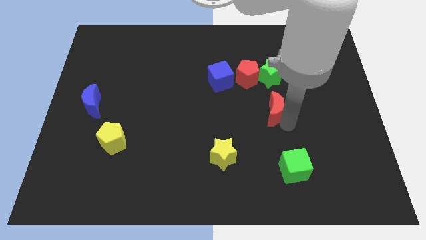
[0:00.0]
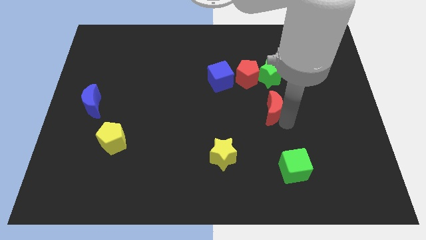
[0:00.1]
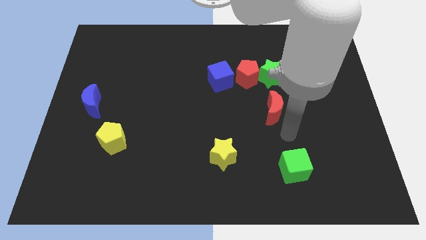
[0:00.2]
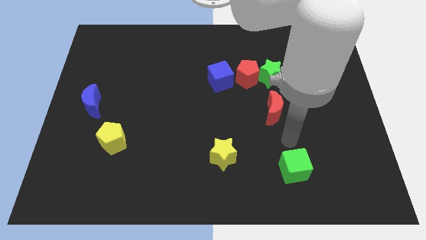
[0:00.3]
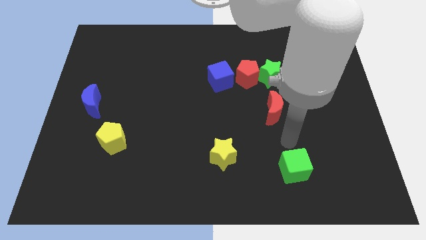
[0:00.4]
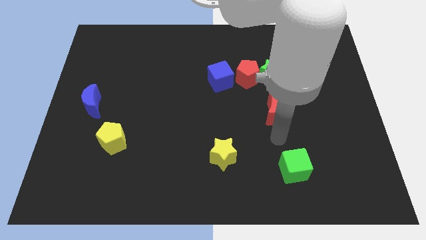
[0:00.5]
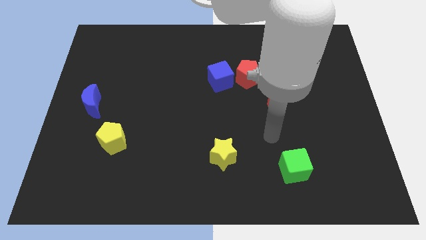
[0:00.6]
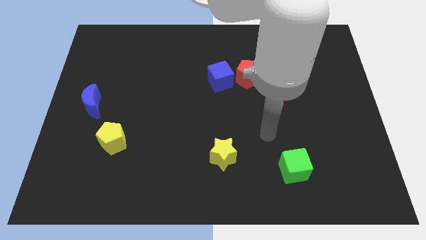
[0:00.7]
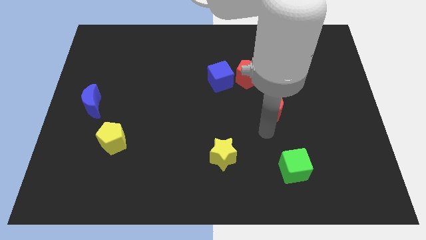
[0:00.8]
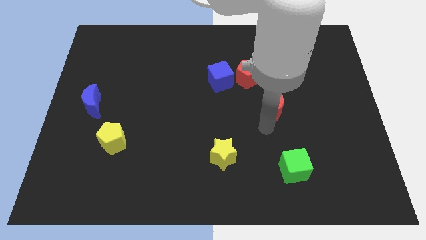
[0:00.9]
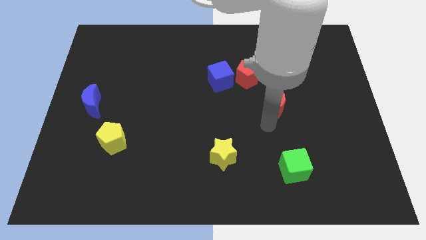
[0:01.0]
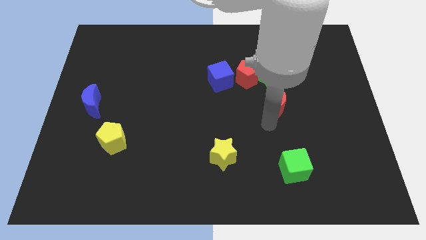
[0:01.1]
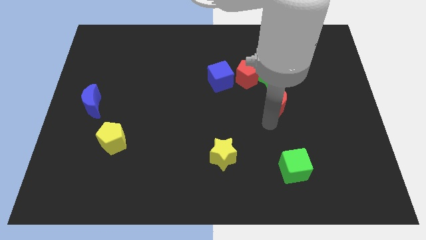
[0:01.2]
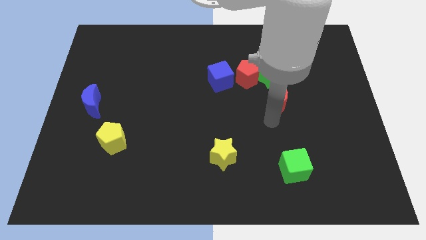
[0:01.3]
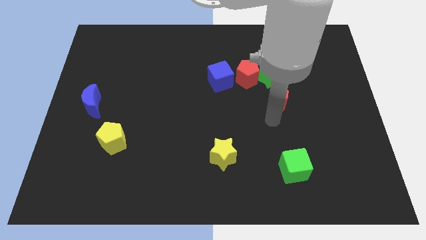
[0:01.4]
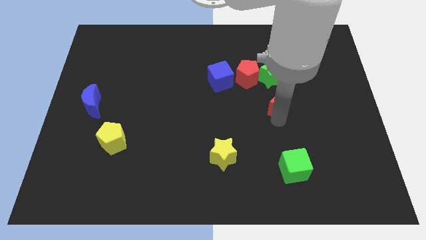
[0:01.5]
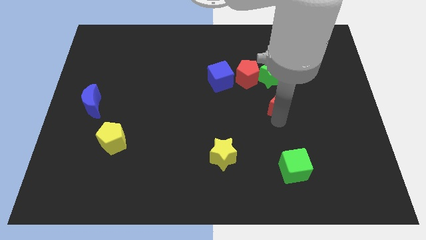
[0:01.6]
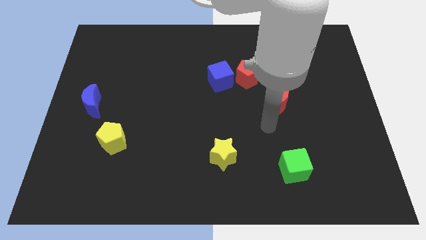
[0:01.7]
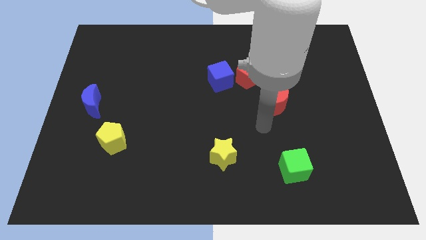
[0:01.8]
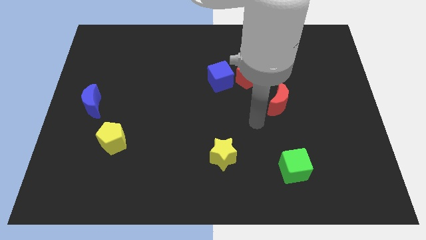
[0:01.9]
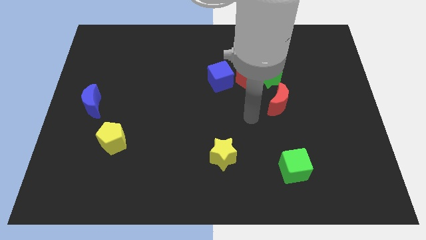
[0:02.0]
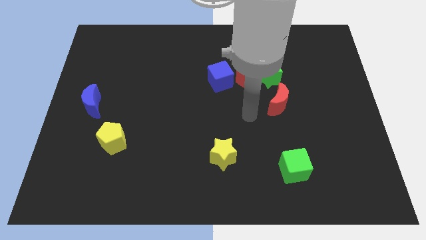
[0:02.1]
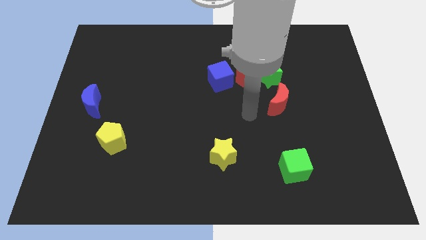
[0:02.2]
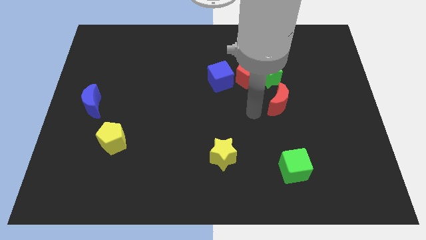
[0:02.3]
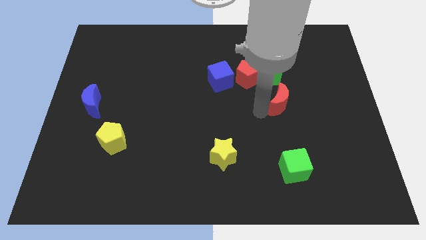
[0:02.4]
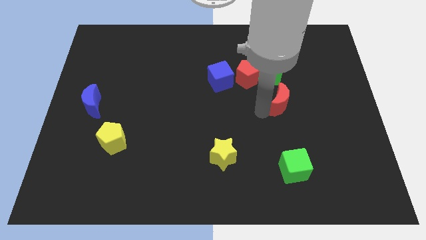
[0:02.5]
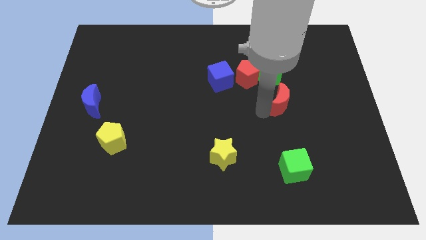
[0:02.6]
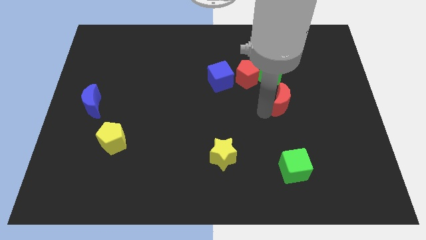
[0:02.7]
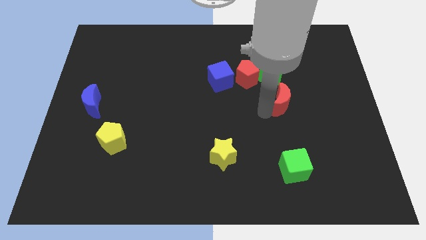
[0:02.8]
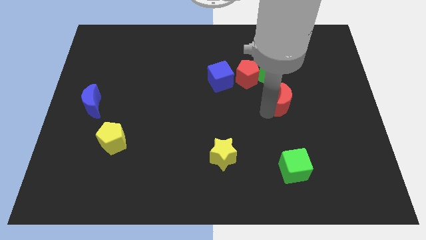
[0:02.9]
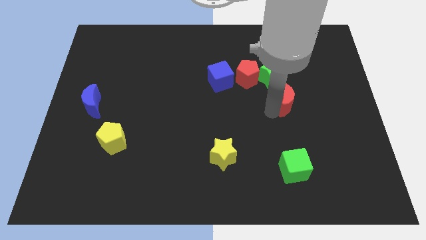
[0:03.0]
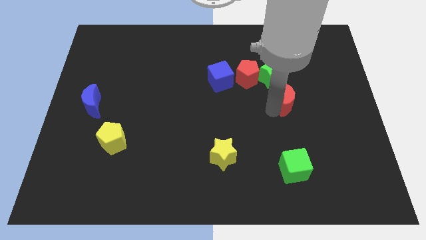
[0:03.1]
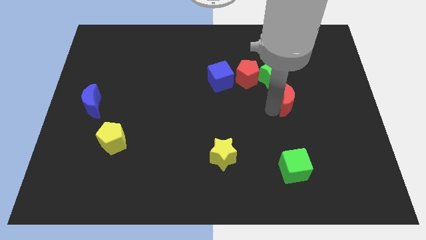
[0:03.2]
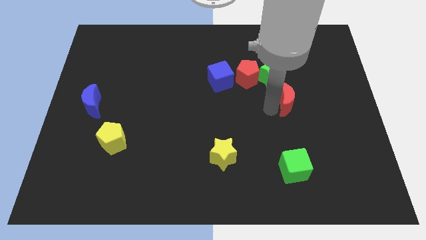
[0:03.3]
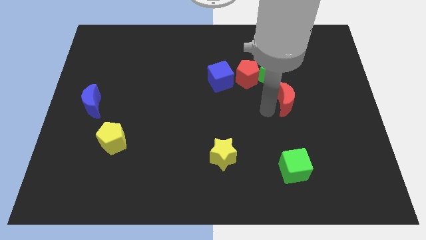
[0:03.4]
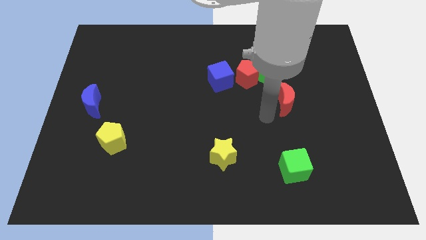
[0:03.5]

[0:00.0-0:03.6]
slide the red moon to the bottom right side of the green star

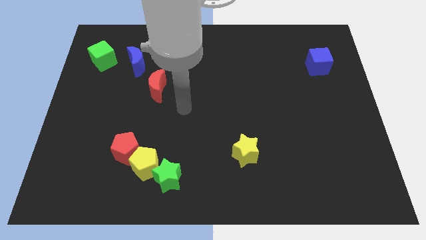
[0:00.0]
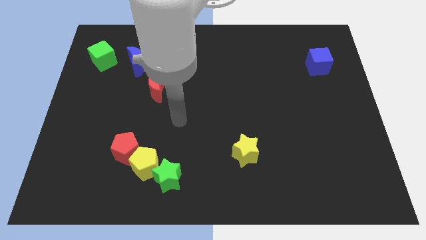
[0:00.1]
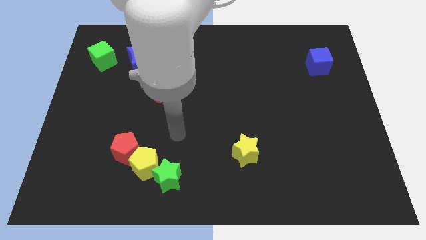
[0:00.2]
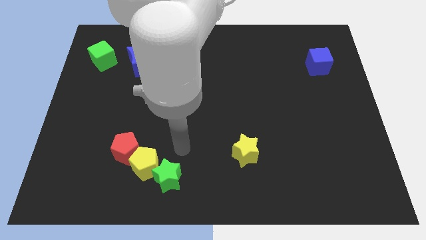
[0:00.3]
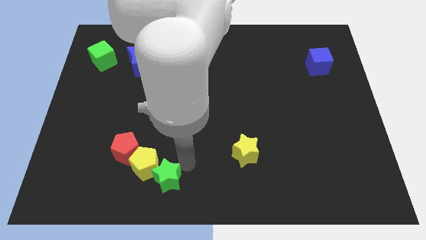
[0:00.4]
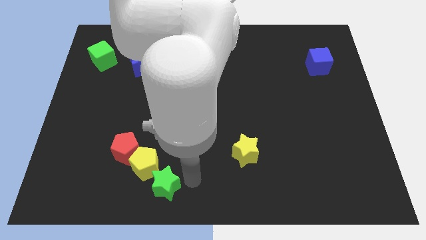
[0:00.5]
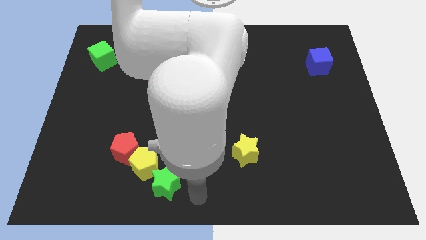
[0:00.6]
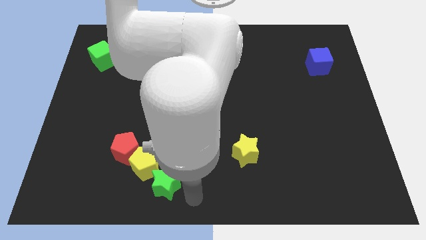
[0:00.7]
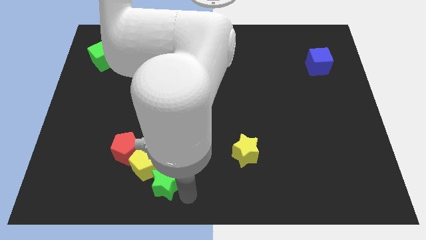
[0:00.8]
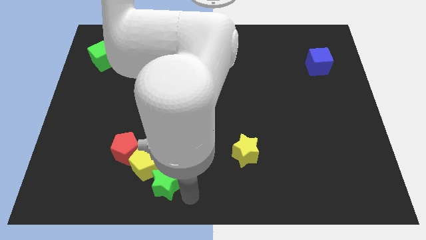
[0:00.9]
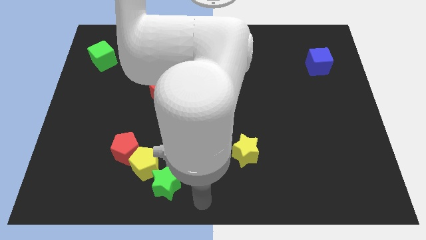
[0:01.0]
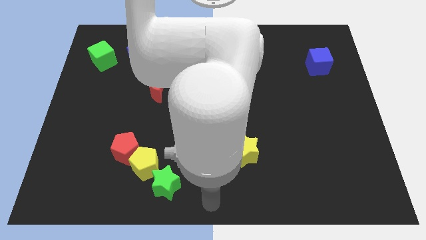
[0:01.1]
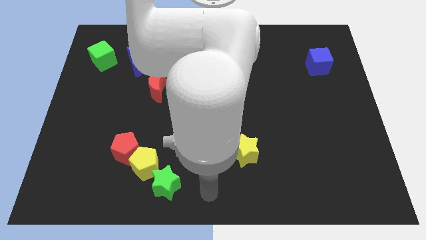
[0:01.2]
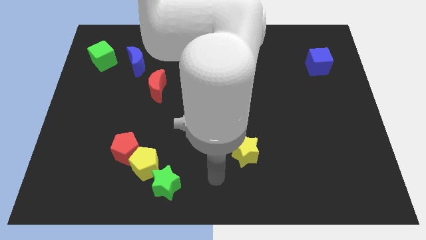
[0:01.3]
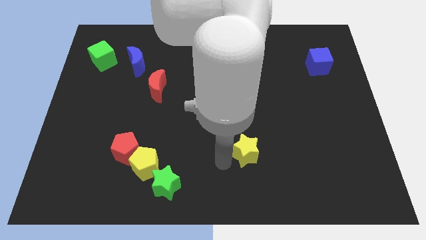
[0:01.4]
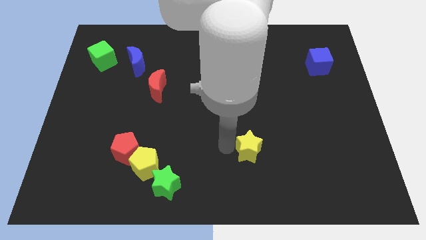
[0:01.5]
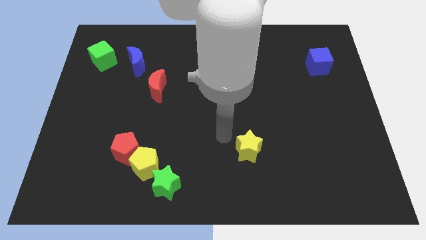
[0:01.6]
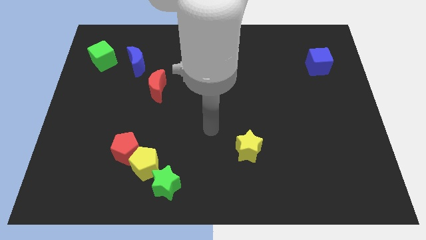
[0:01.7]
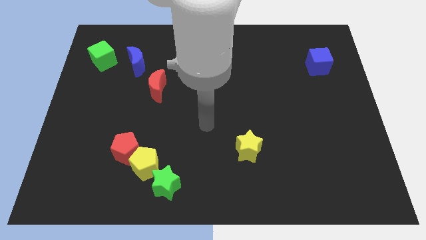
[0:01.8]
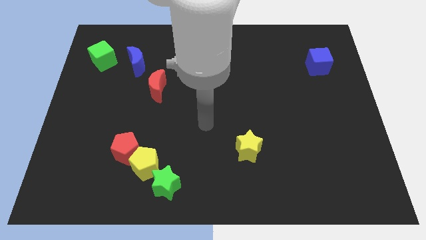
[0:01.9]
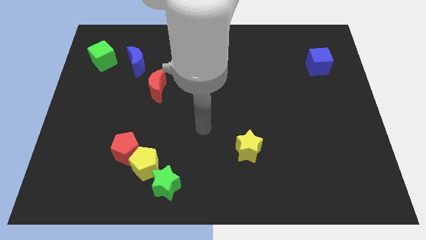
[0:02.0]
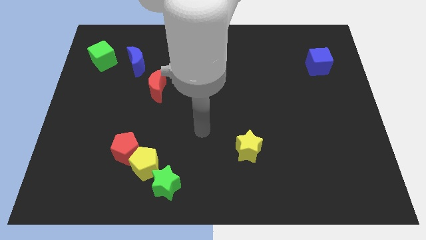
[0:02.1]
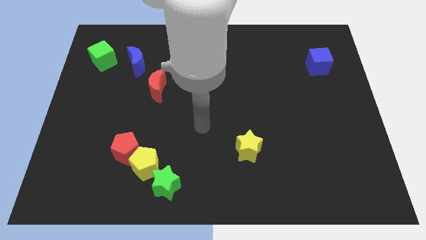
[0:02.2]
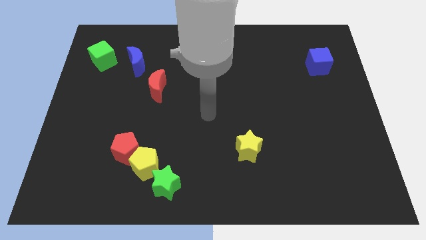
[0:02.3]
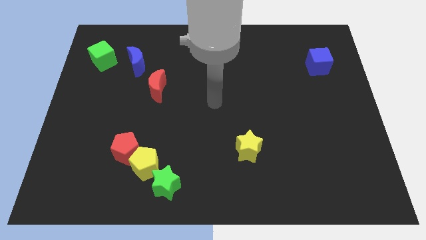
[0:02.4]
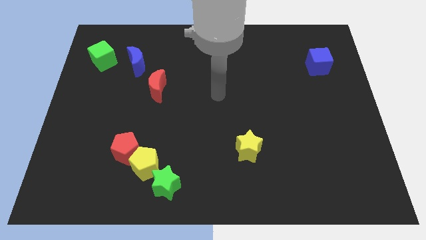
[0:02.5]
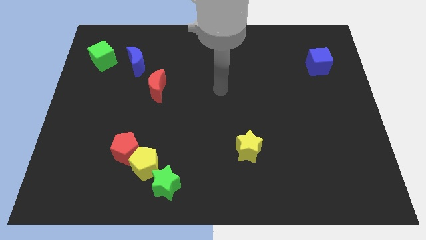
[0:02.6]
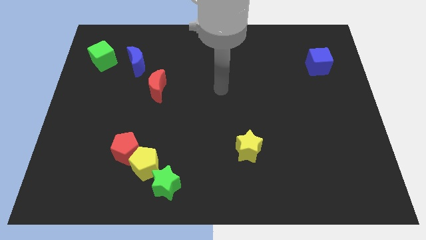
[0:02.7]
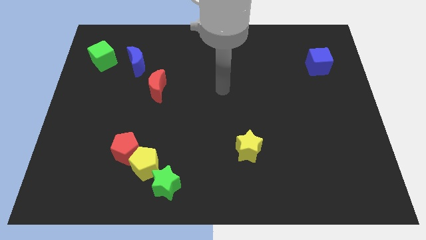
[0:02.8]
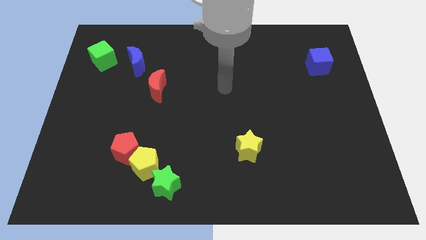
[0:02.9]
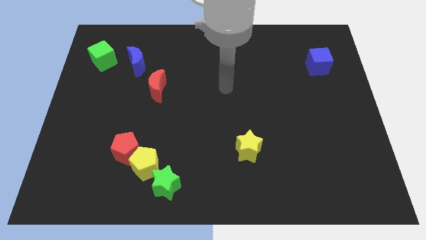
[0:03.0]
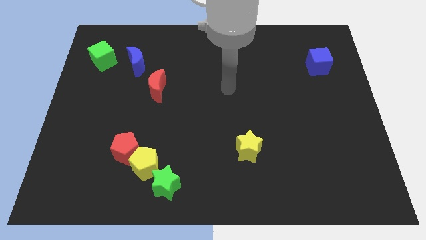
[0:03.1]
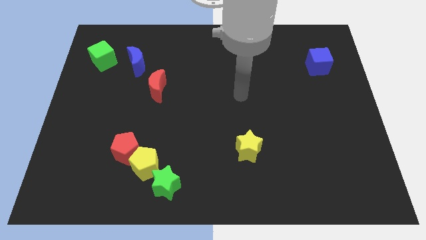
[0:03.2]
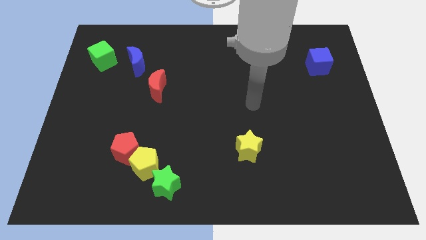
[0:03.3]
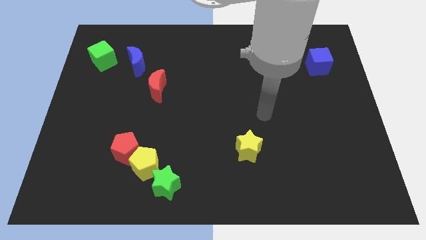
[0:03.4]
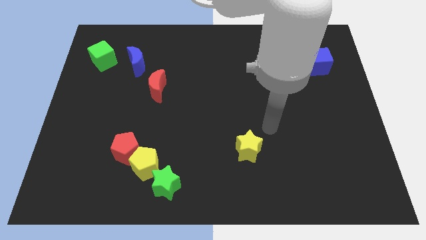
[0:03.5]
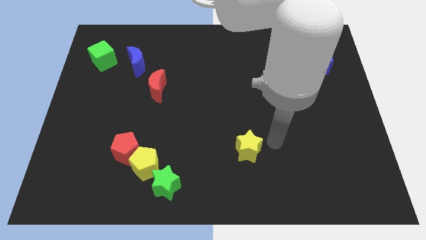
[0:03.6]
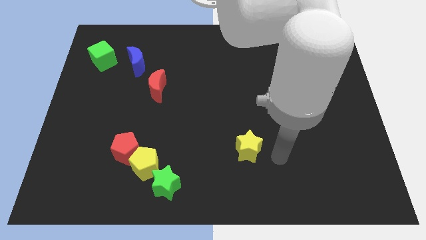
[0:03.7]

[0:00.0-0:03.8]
point your arm at the right side of the yellow star

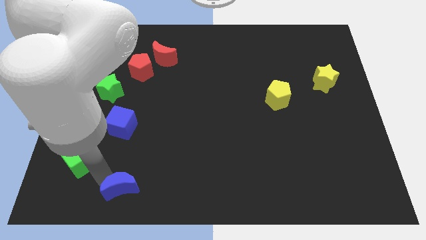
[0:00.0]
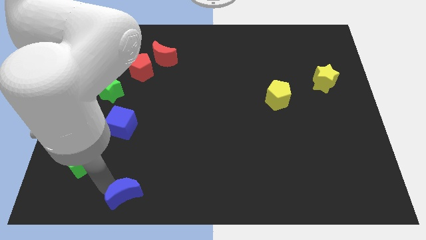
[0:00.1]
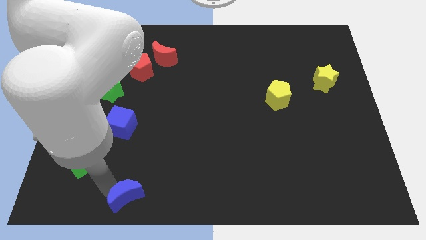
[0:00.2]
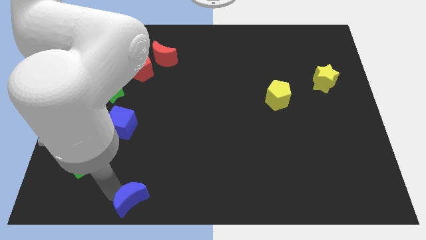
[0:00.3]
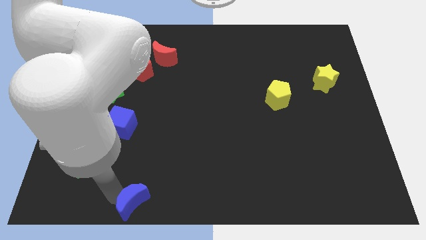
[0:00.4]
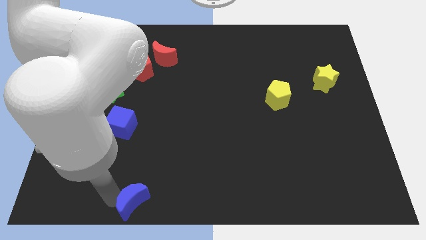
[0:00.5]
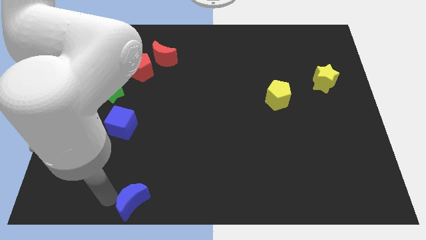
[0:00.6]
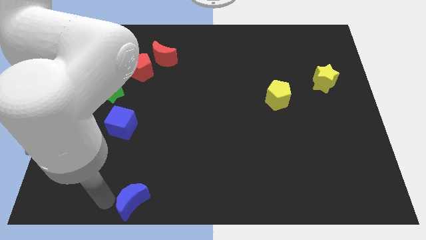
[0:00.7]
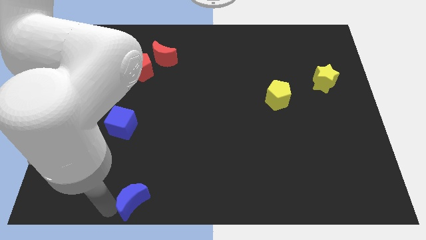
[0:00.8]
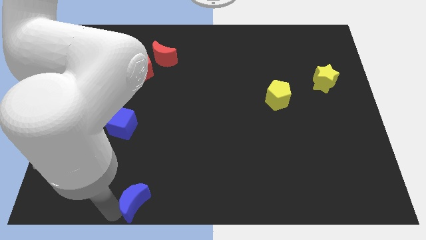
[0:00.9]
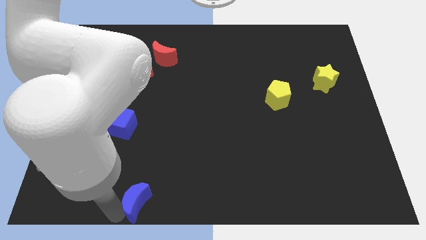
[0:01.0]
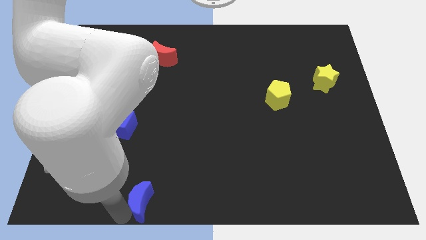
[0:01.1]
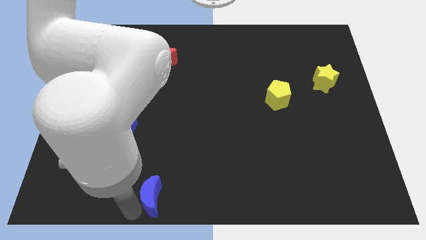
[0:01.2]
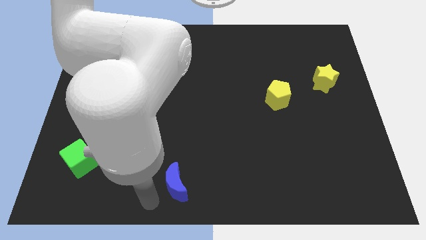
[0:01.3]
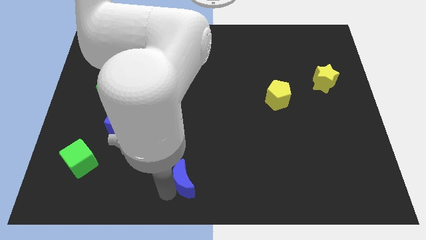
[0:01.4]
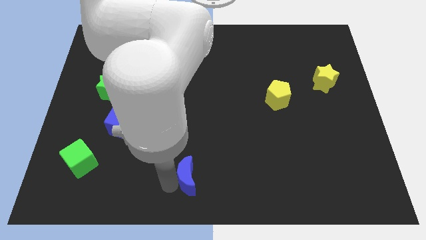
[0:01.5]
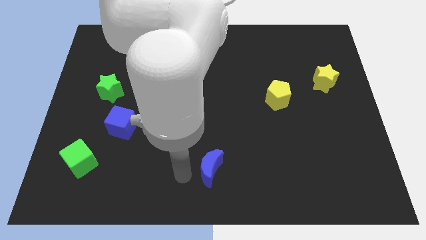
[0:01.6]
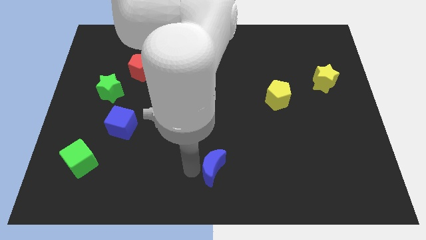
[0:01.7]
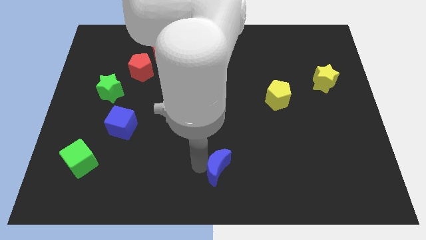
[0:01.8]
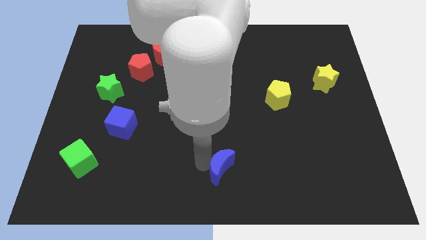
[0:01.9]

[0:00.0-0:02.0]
put the blue crescent parallel to the green cube
